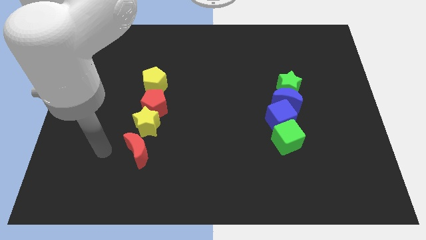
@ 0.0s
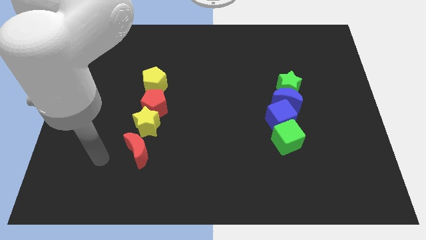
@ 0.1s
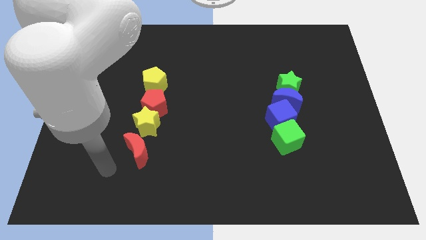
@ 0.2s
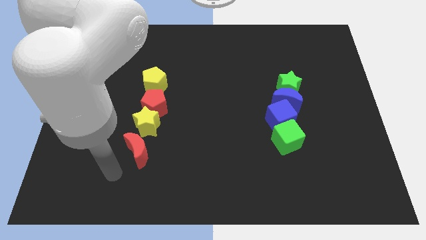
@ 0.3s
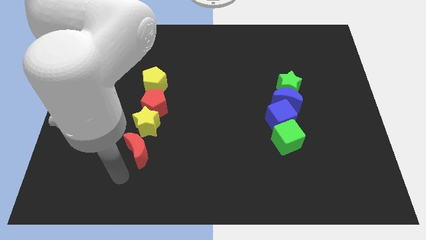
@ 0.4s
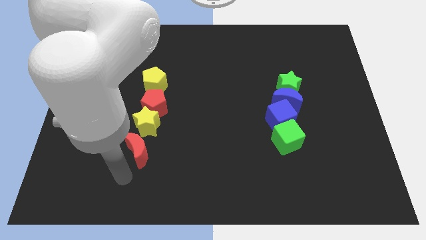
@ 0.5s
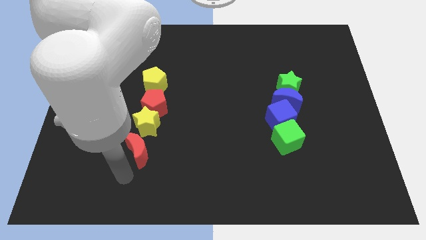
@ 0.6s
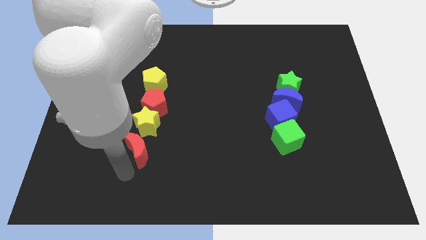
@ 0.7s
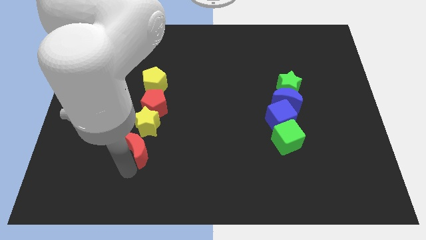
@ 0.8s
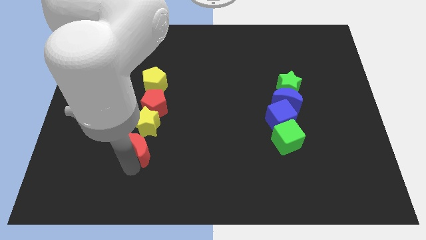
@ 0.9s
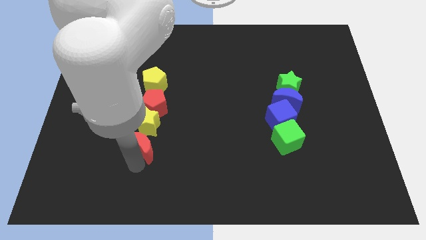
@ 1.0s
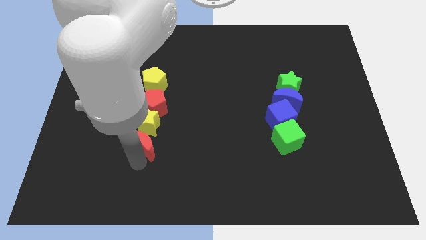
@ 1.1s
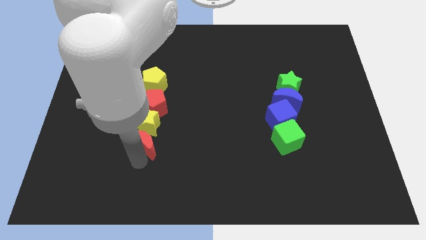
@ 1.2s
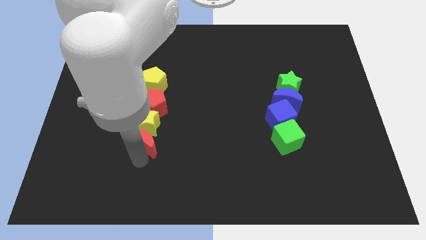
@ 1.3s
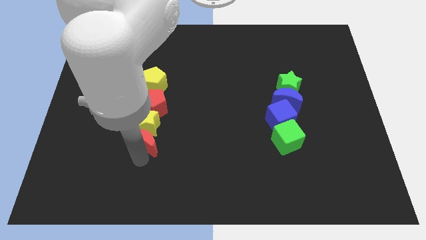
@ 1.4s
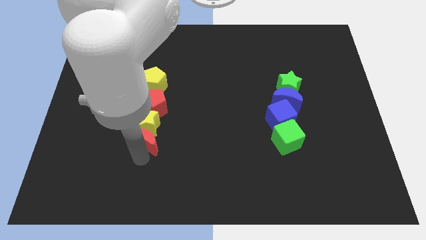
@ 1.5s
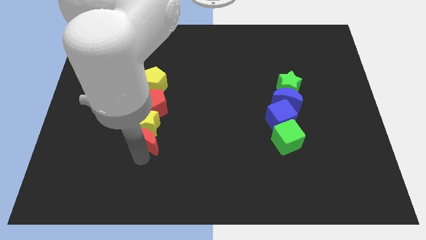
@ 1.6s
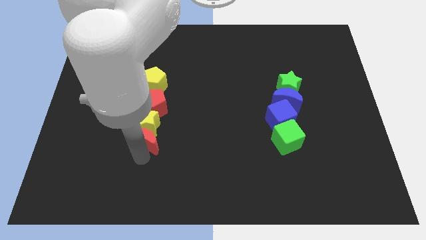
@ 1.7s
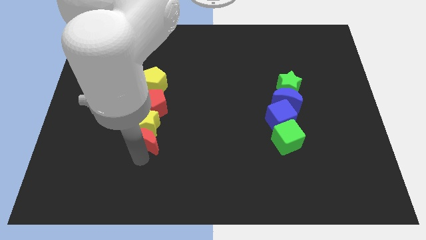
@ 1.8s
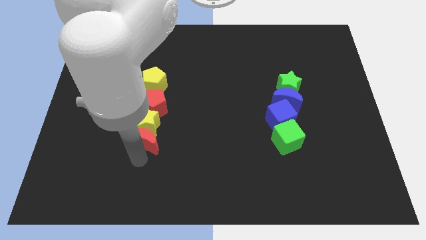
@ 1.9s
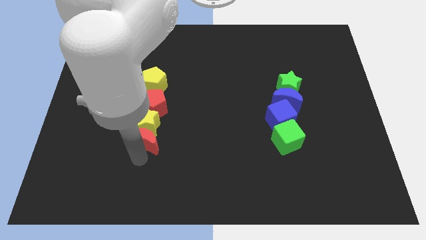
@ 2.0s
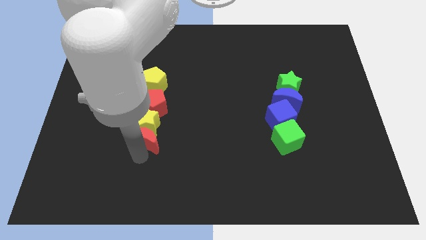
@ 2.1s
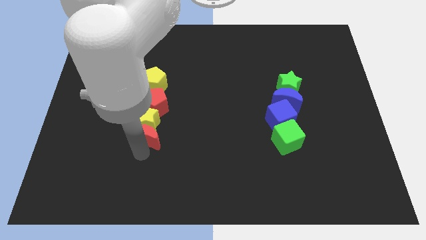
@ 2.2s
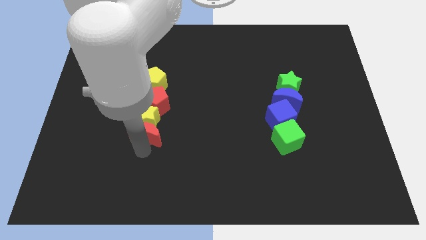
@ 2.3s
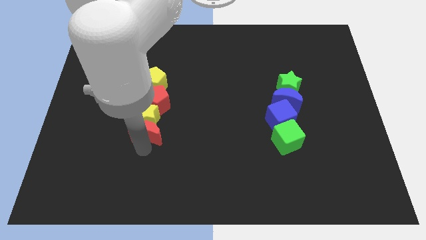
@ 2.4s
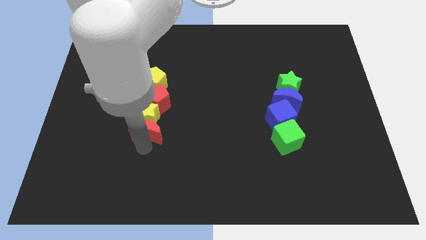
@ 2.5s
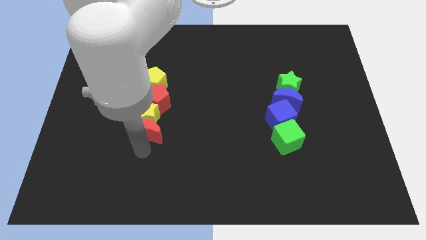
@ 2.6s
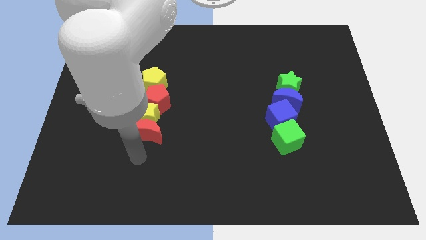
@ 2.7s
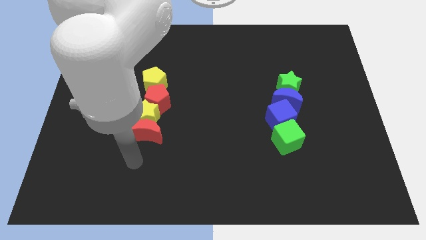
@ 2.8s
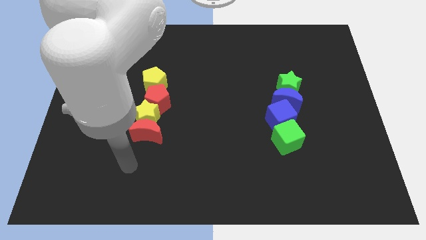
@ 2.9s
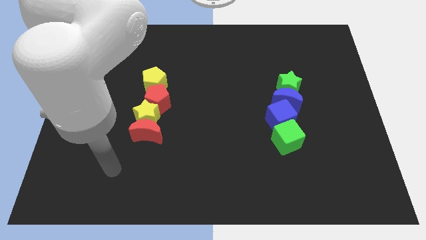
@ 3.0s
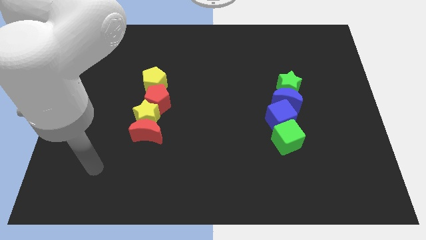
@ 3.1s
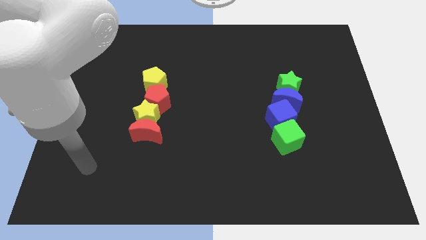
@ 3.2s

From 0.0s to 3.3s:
move the yellow star and red pentagon with the help of the red crescent

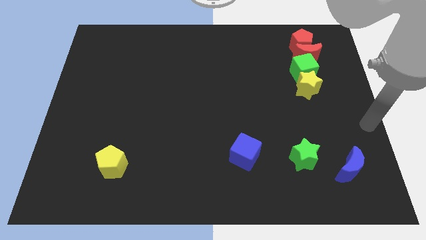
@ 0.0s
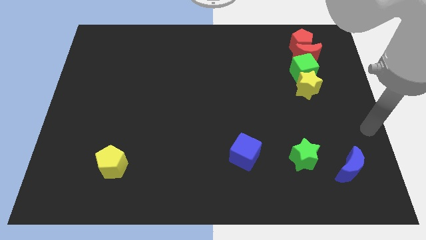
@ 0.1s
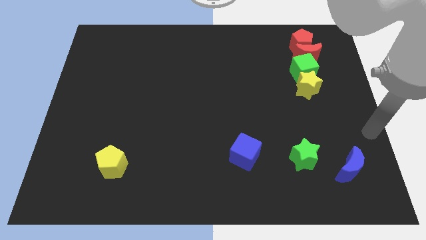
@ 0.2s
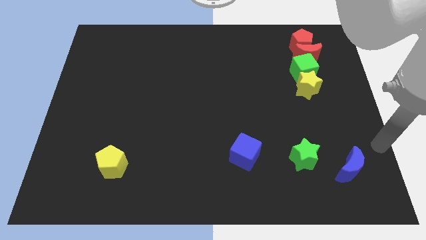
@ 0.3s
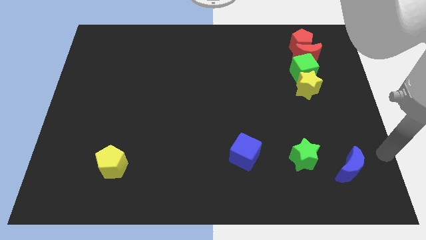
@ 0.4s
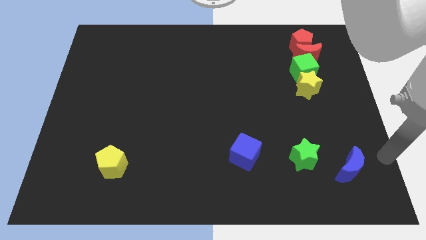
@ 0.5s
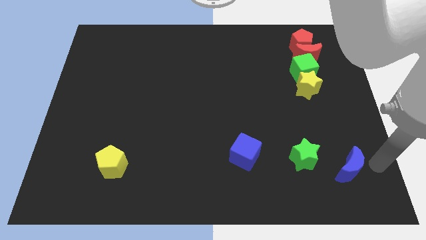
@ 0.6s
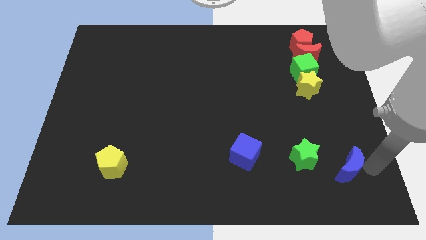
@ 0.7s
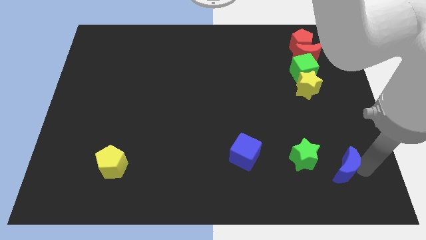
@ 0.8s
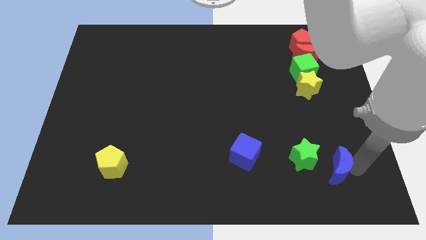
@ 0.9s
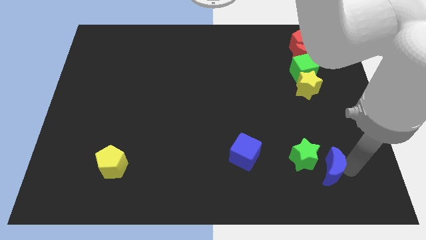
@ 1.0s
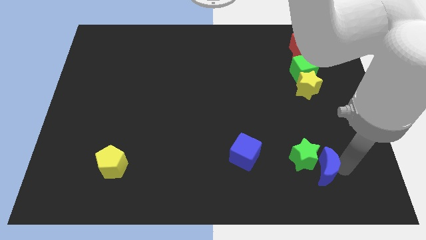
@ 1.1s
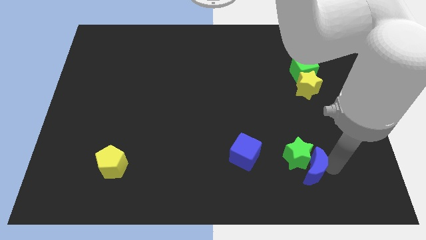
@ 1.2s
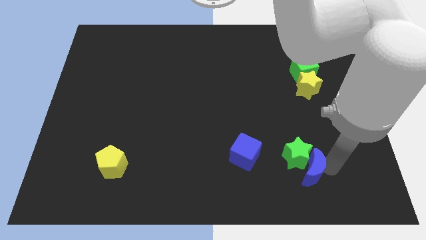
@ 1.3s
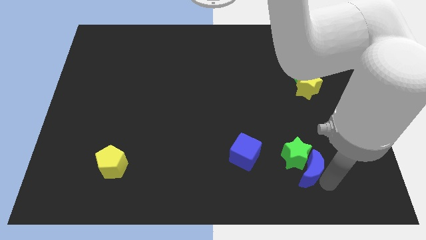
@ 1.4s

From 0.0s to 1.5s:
push the blue moon into the green star

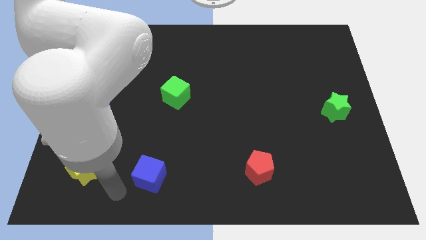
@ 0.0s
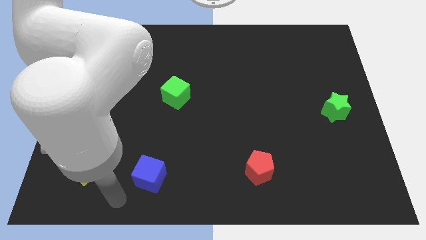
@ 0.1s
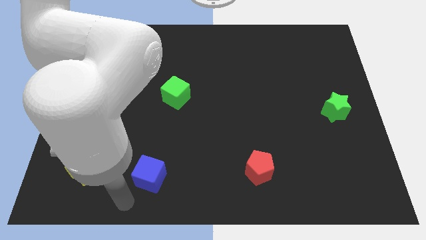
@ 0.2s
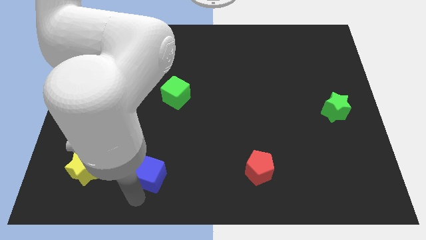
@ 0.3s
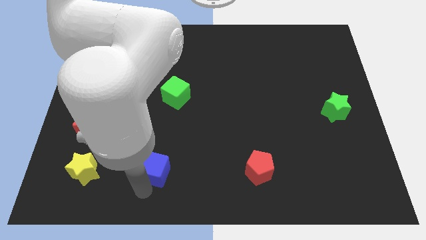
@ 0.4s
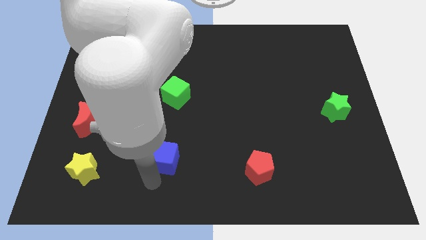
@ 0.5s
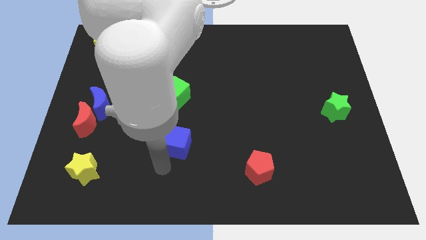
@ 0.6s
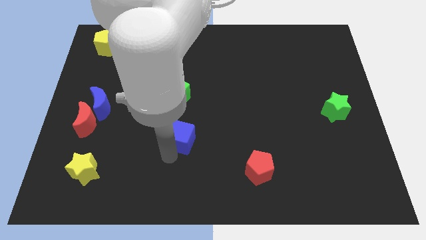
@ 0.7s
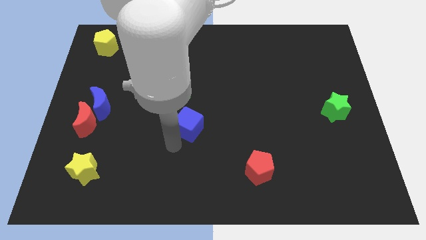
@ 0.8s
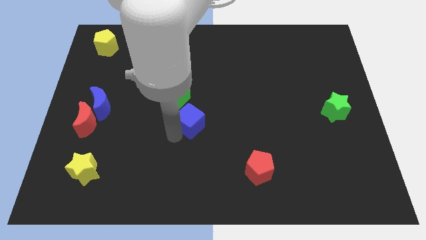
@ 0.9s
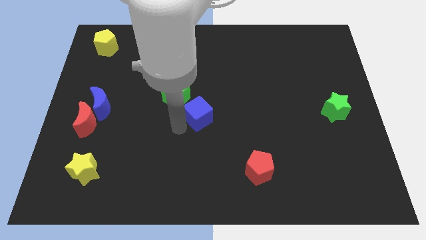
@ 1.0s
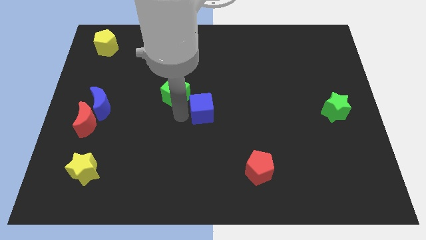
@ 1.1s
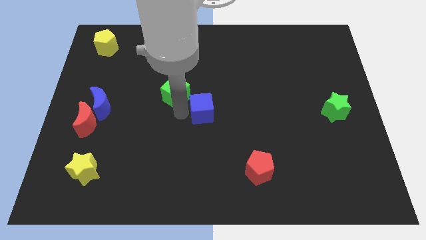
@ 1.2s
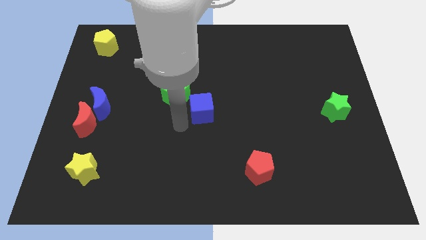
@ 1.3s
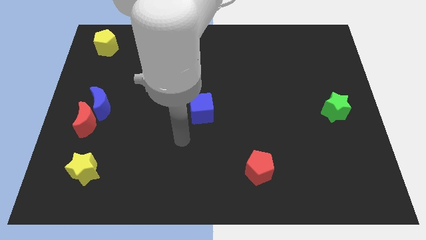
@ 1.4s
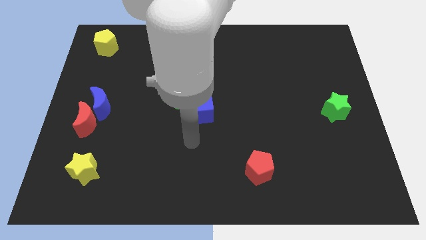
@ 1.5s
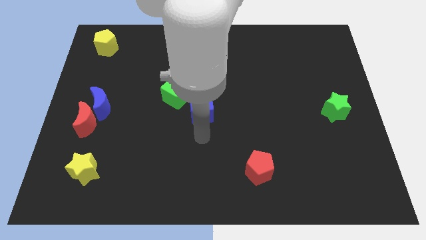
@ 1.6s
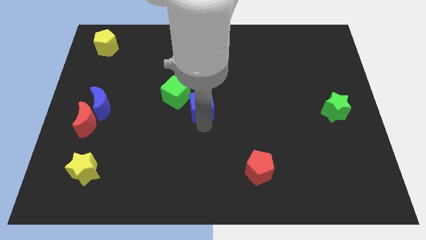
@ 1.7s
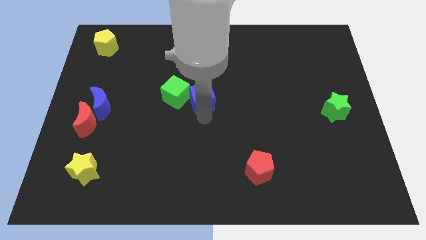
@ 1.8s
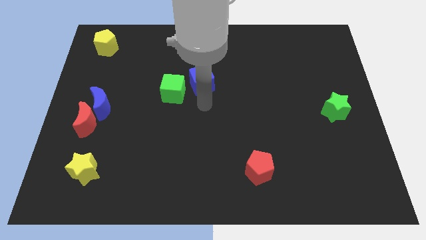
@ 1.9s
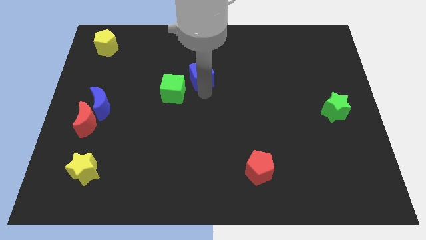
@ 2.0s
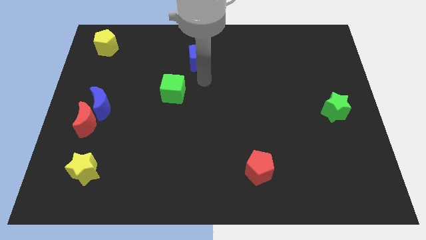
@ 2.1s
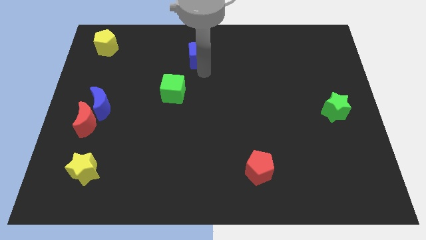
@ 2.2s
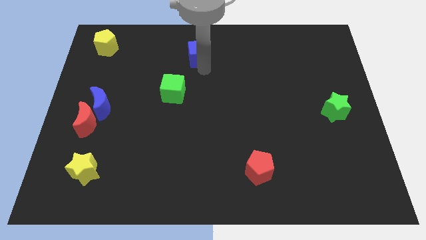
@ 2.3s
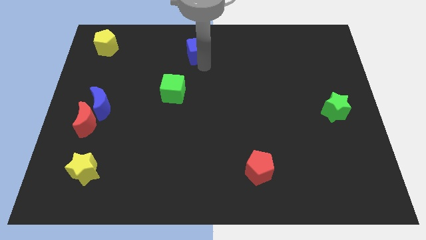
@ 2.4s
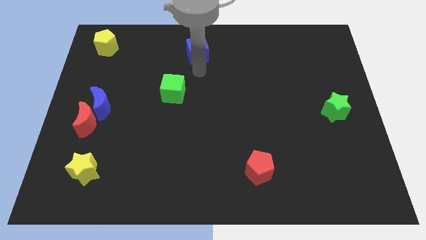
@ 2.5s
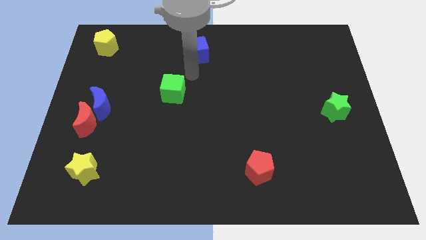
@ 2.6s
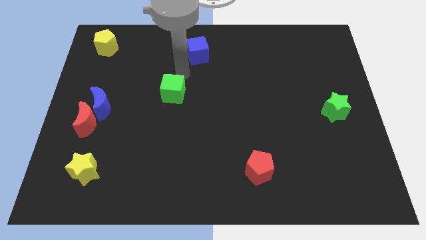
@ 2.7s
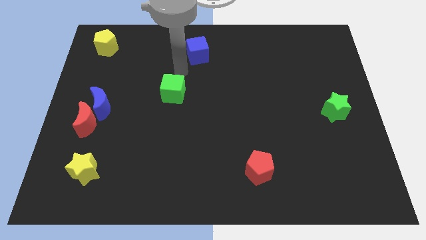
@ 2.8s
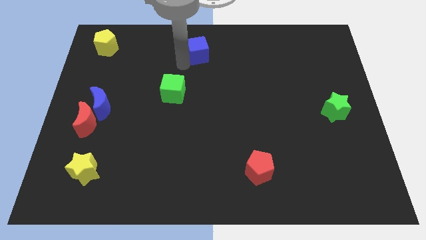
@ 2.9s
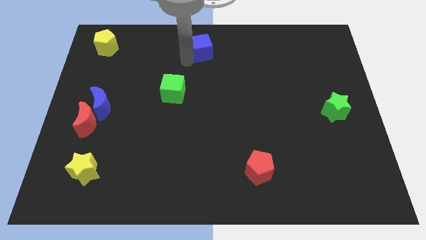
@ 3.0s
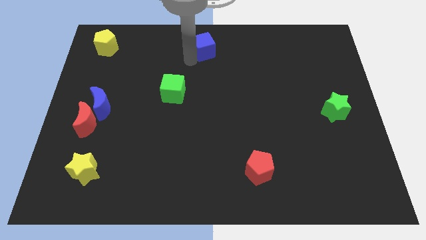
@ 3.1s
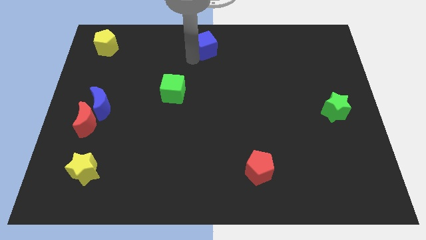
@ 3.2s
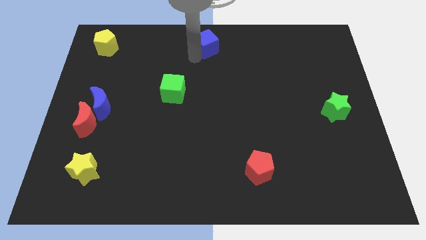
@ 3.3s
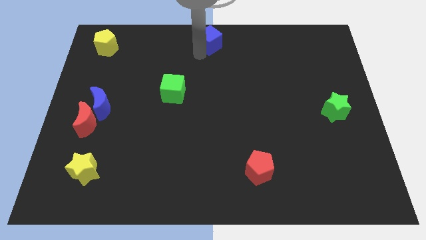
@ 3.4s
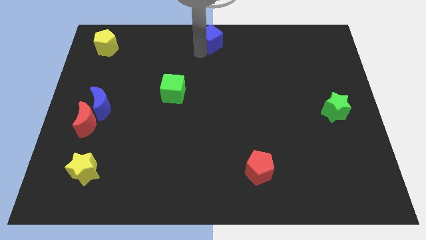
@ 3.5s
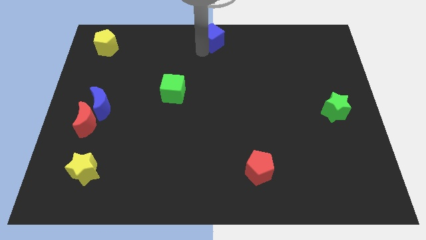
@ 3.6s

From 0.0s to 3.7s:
move blue cube to the top center of the board

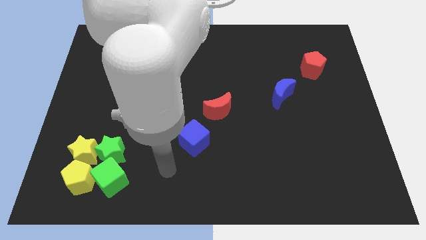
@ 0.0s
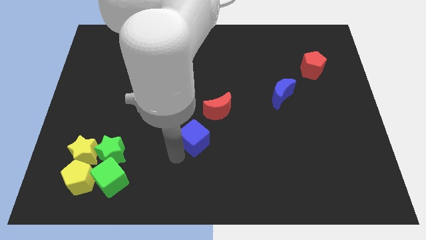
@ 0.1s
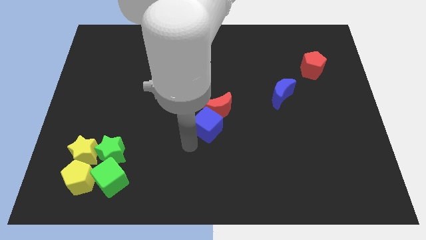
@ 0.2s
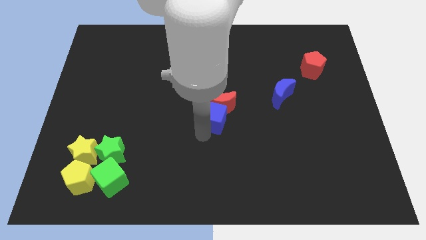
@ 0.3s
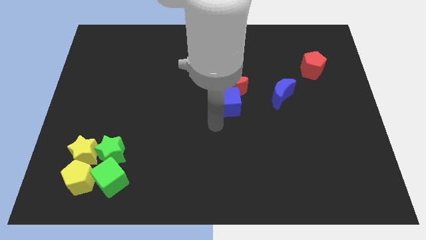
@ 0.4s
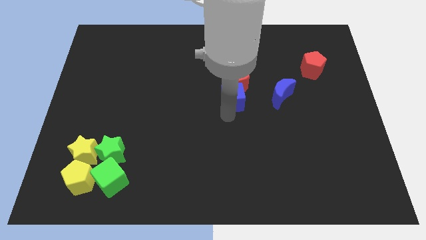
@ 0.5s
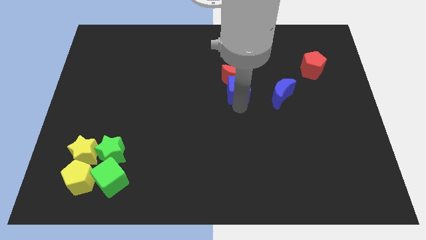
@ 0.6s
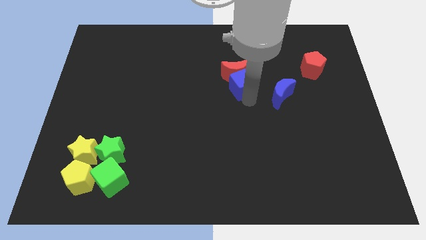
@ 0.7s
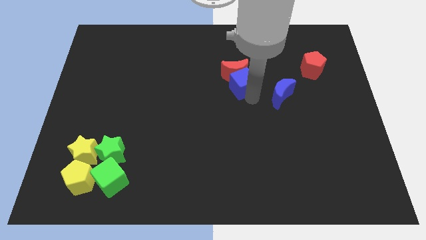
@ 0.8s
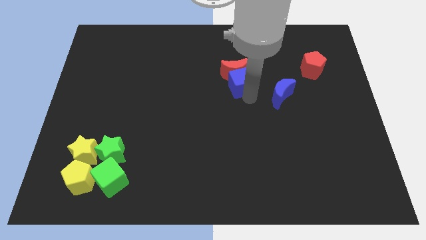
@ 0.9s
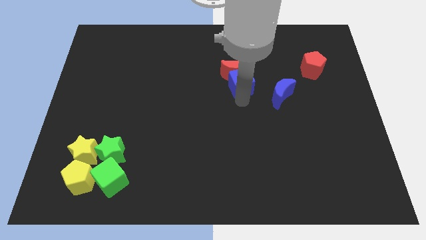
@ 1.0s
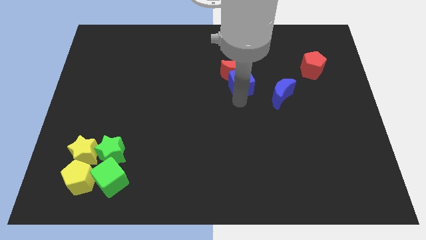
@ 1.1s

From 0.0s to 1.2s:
push the blue cube into the red moon
